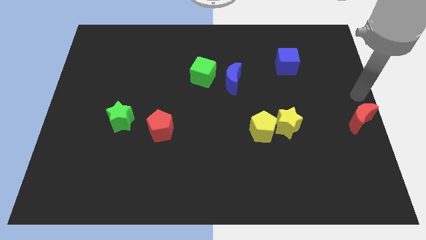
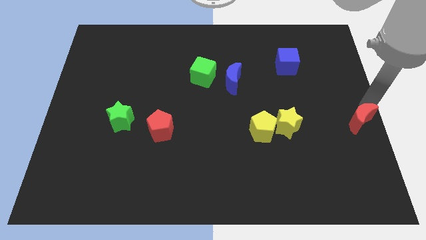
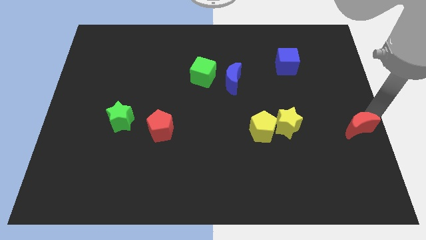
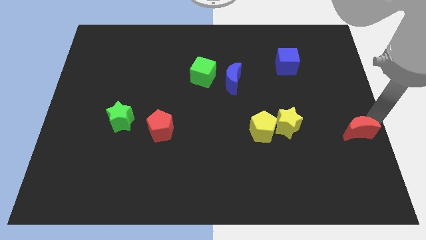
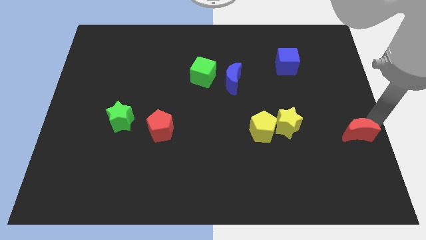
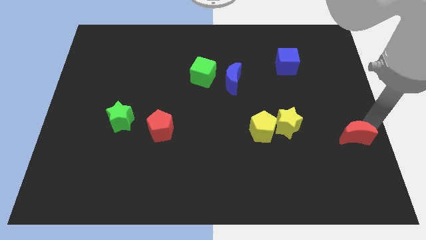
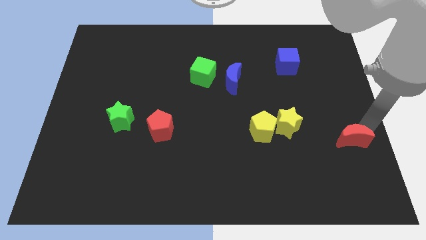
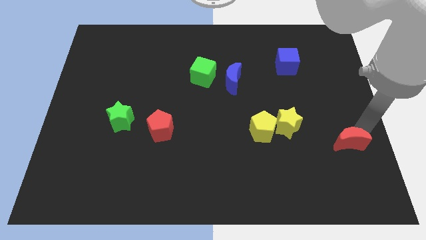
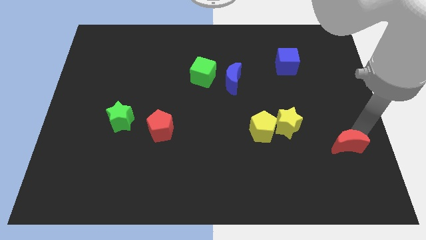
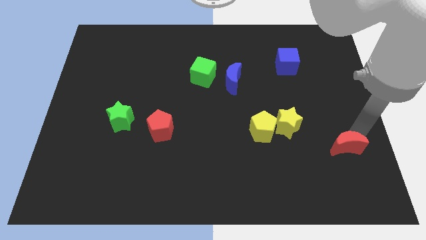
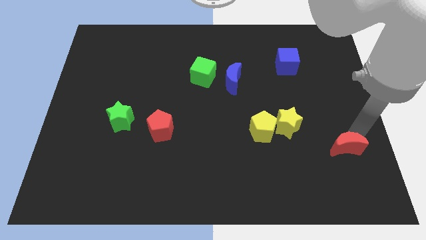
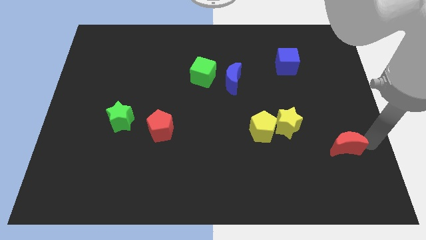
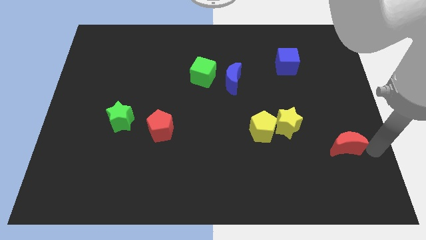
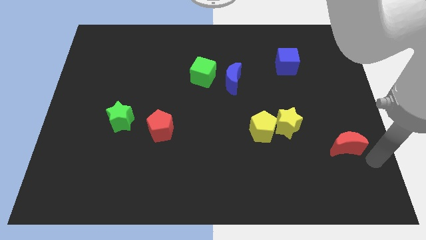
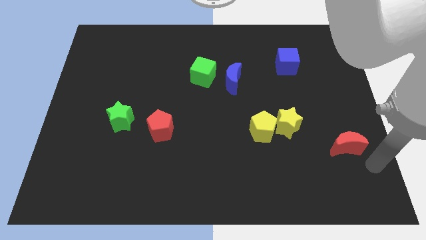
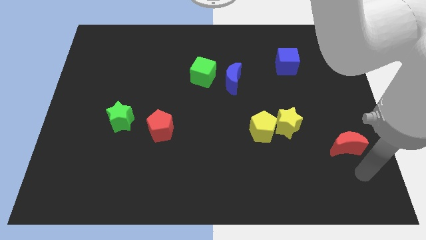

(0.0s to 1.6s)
place the red moon diagonally at the bottom right of the yellow star

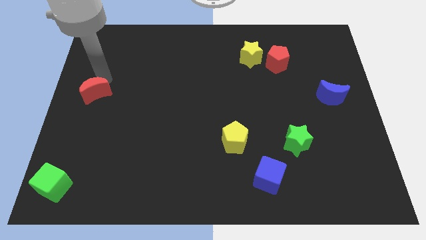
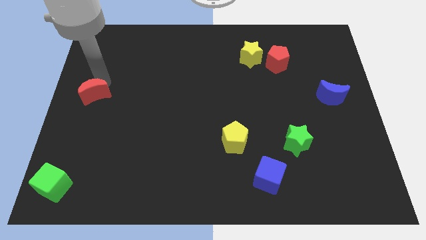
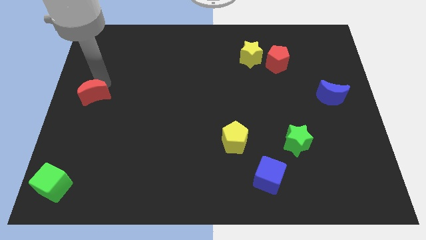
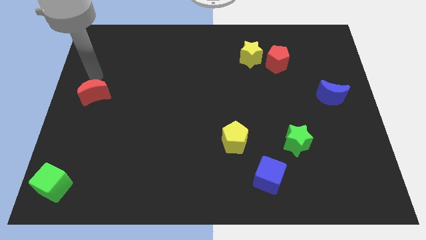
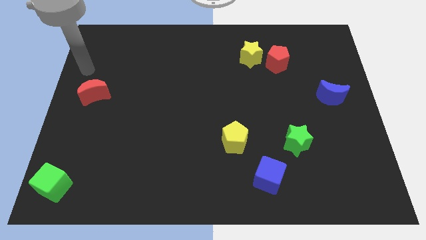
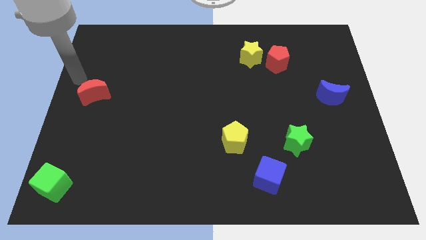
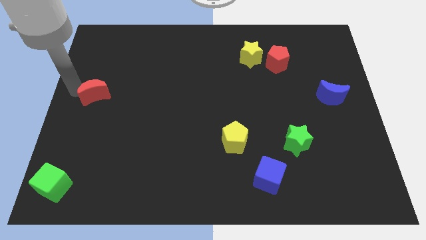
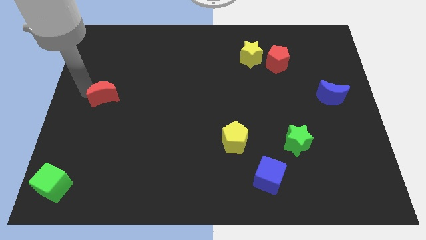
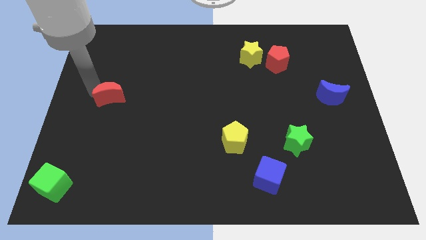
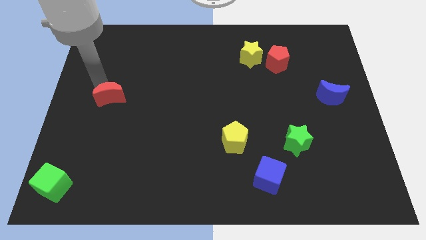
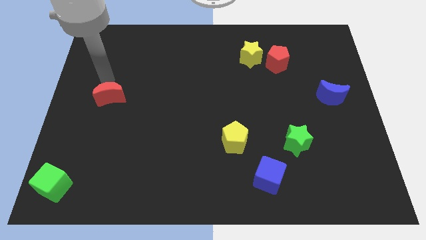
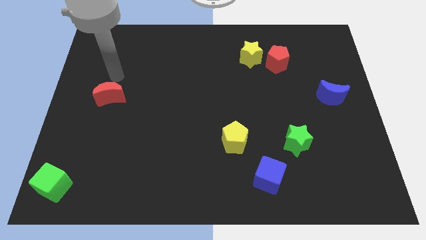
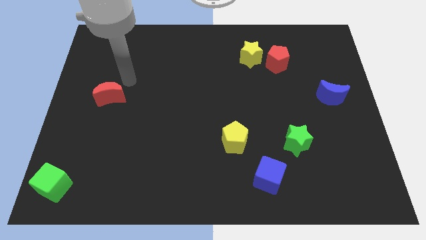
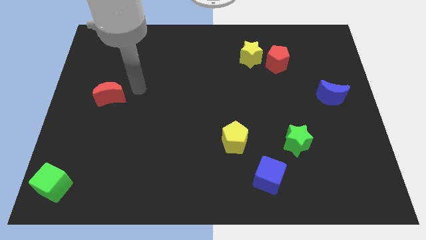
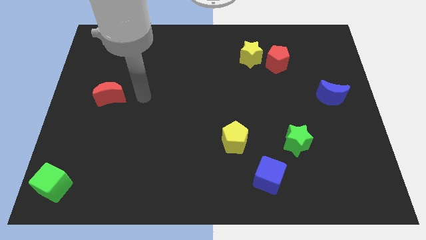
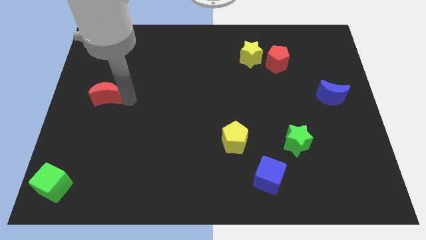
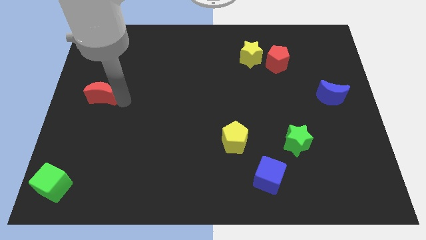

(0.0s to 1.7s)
place the red moon to the center left

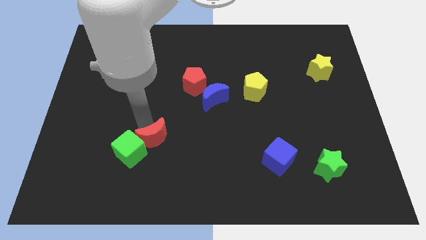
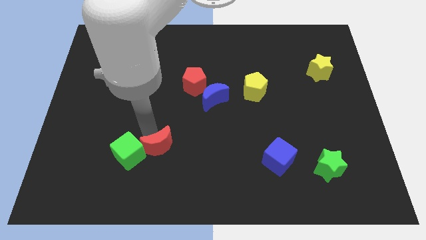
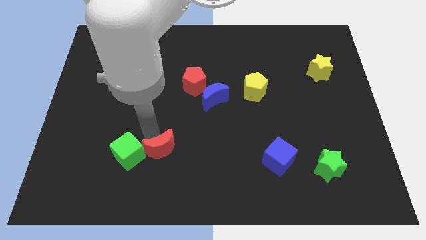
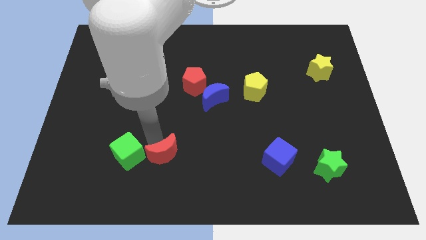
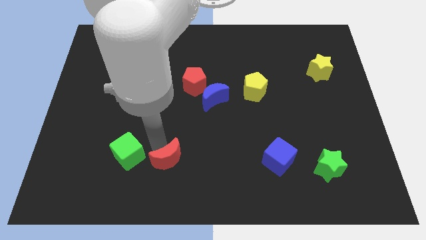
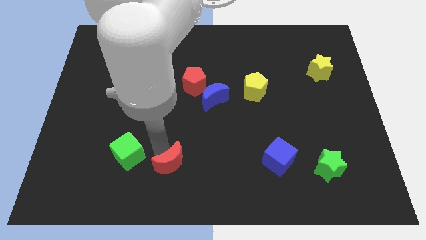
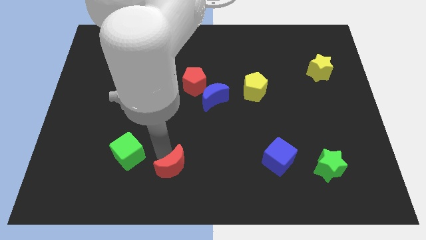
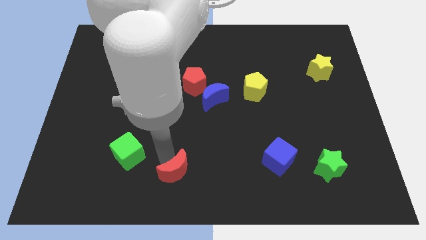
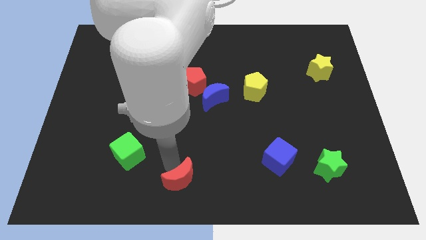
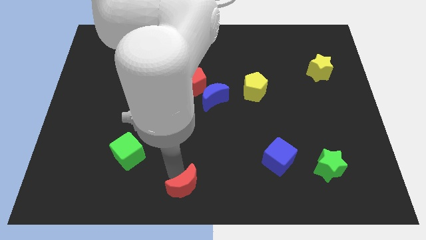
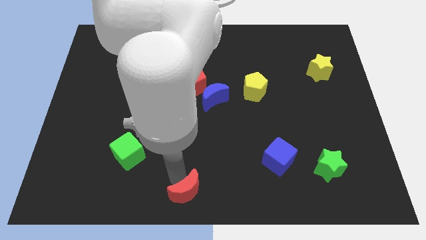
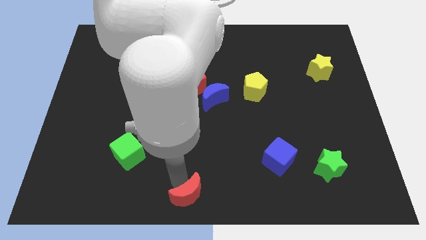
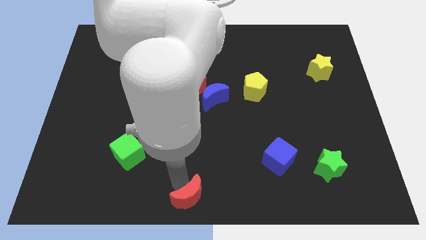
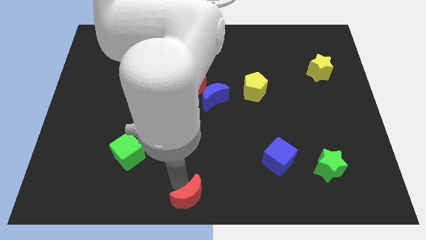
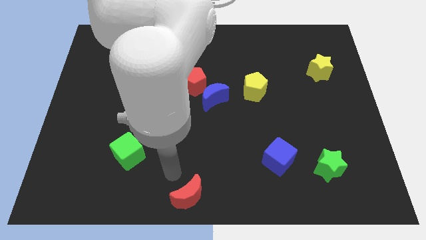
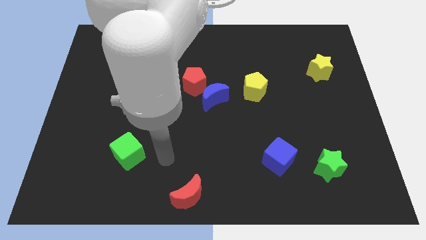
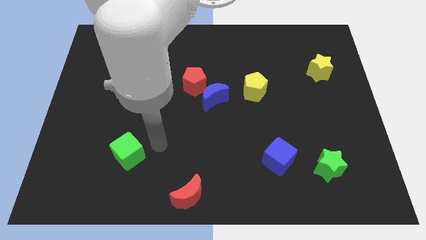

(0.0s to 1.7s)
move the red crescent to the bottom centre of the board

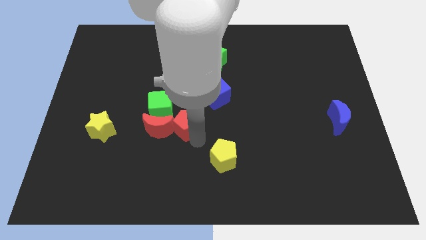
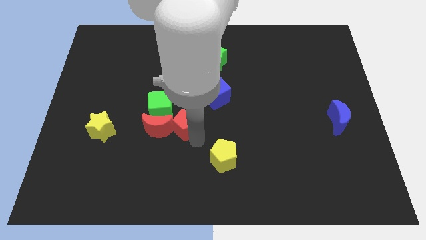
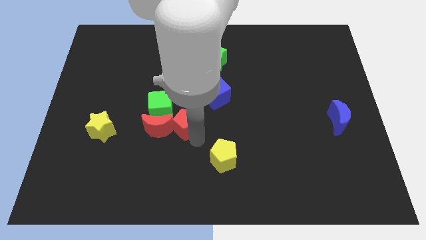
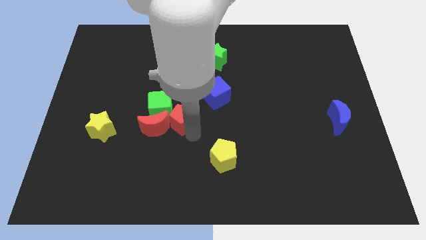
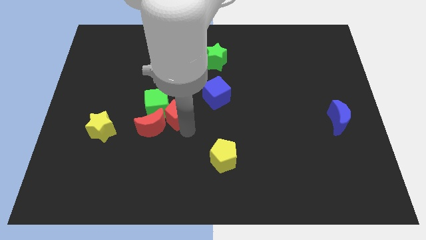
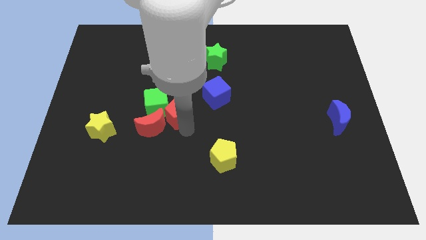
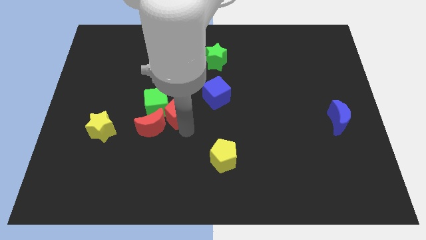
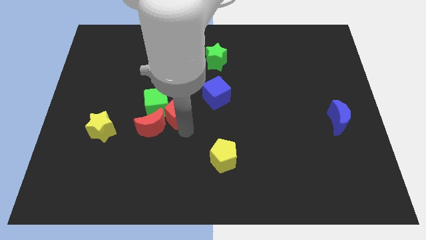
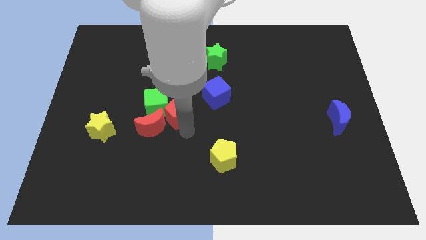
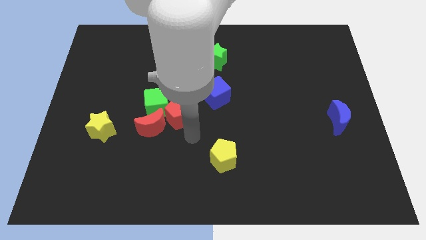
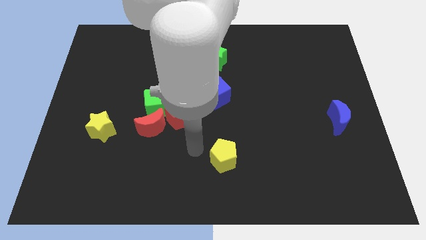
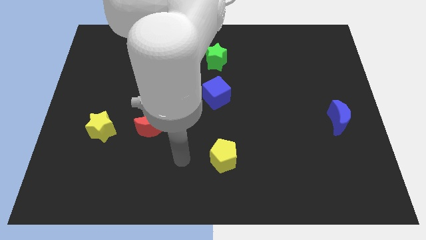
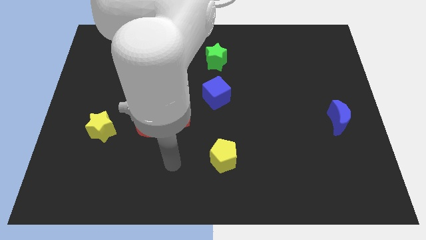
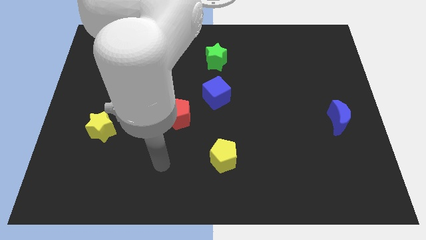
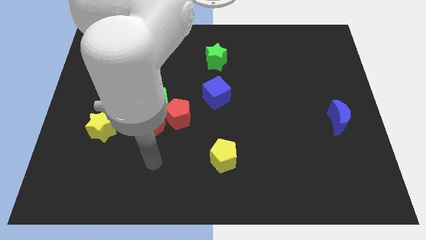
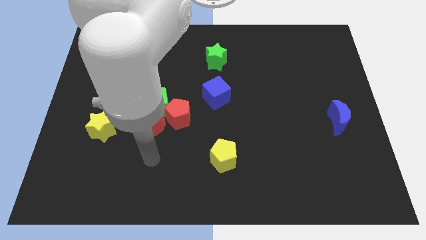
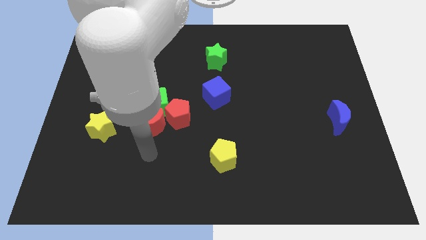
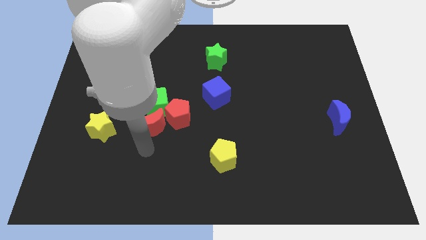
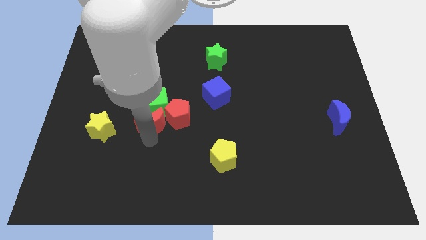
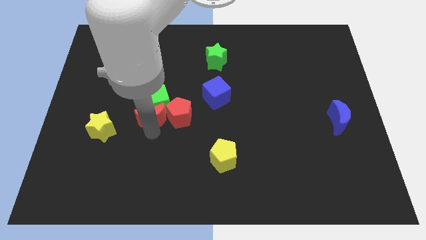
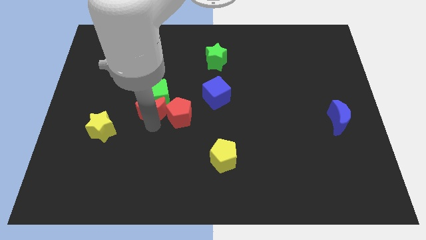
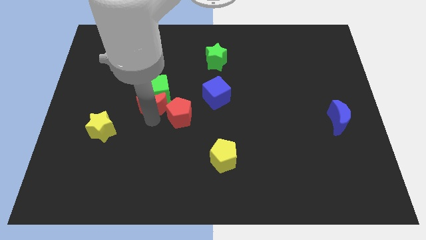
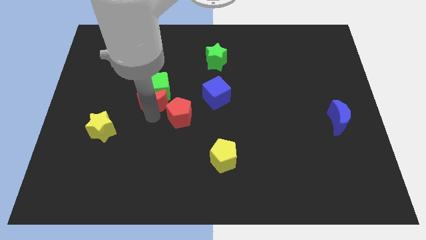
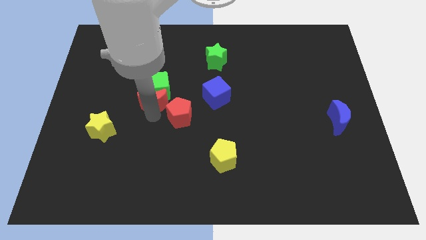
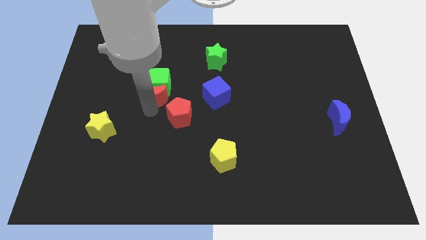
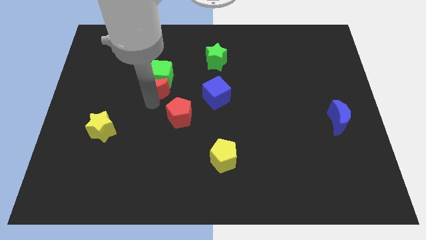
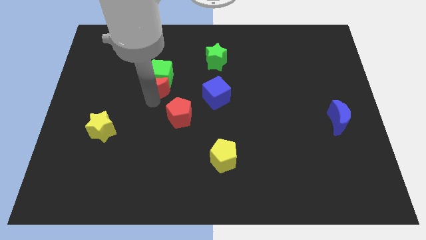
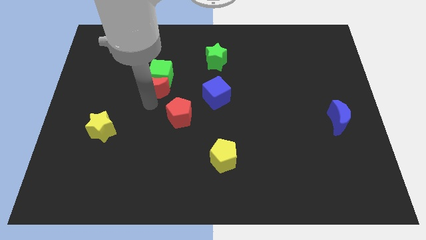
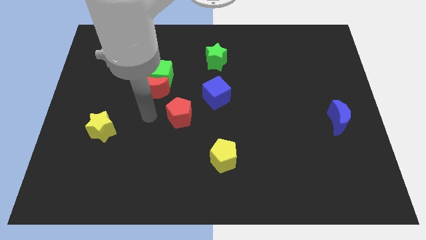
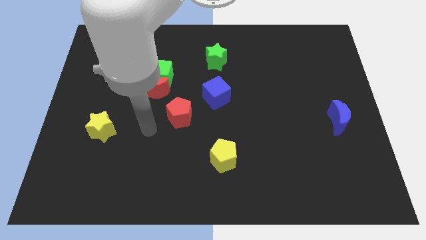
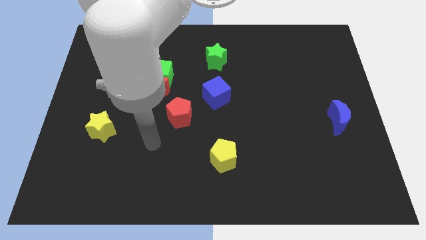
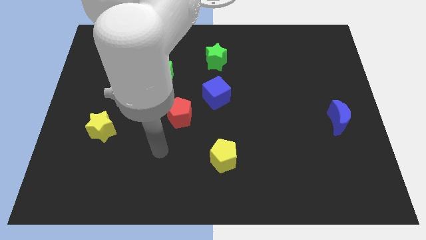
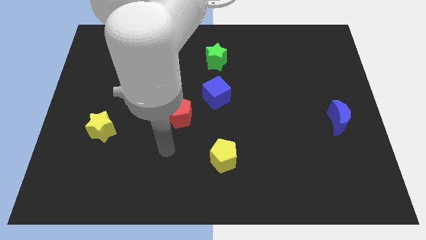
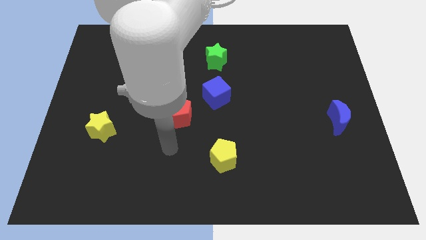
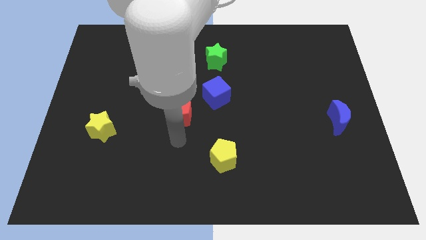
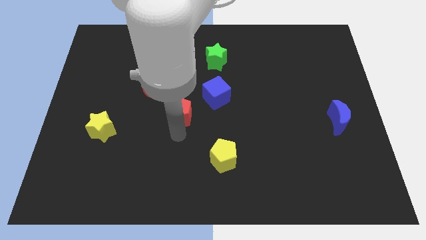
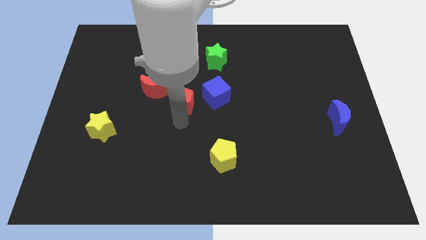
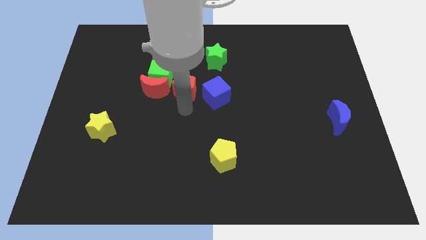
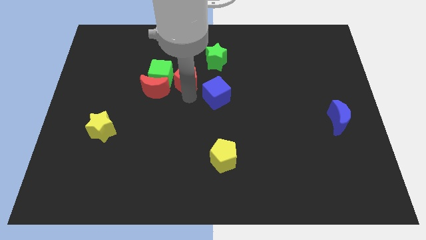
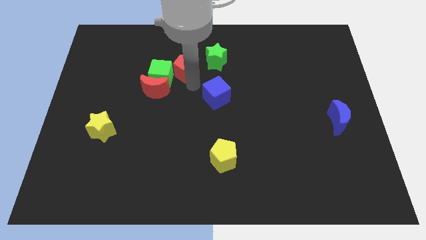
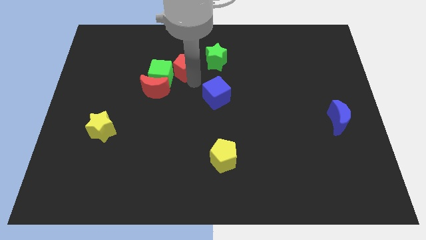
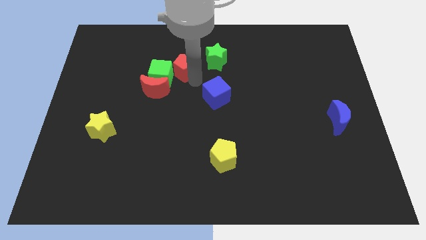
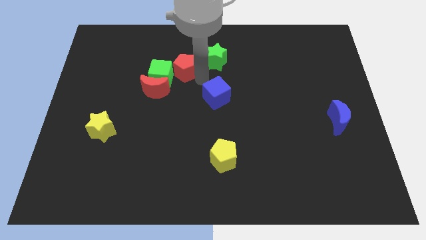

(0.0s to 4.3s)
push the group of blocks to the left side of the green star
